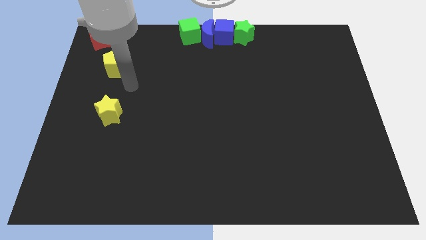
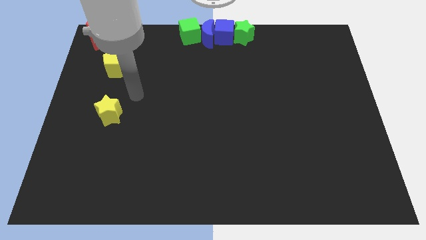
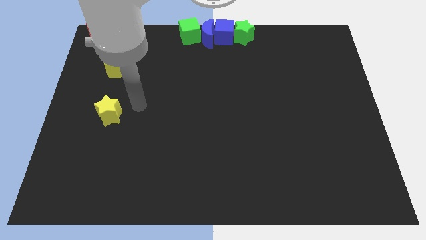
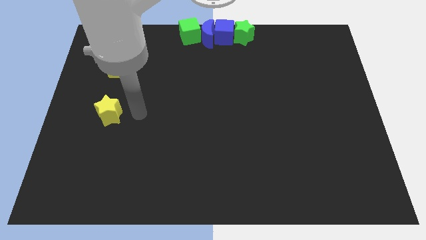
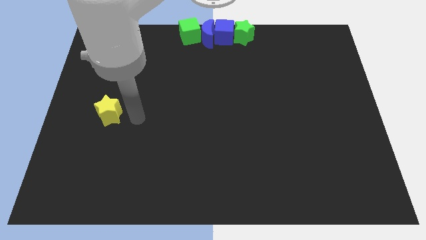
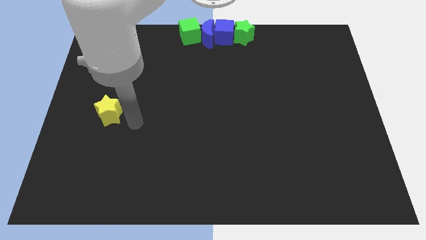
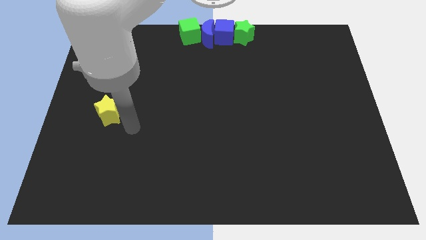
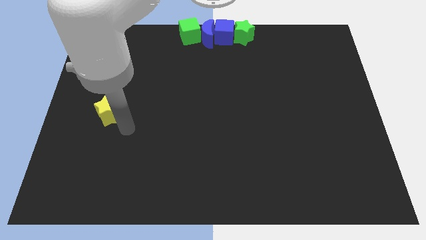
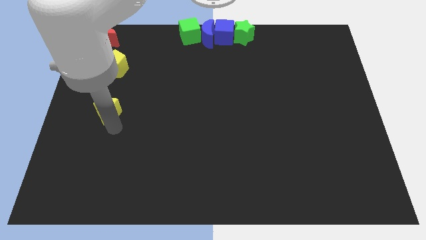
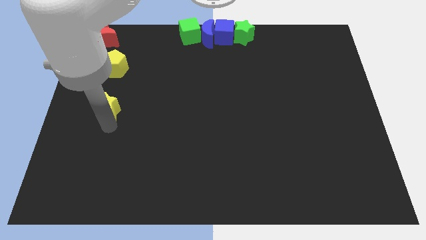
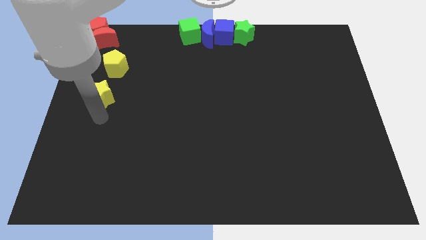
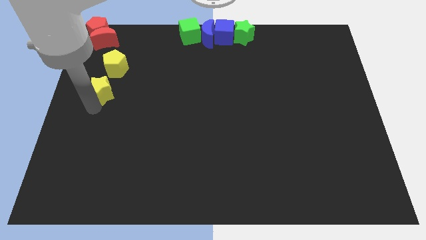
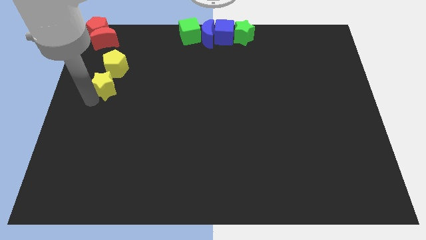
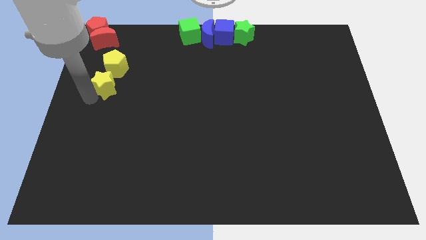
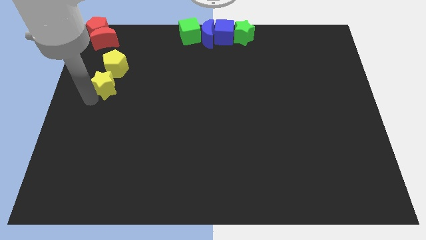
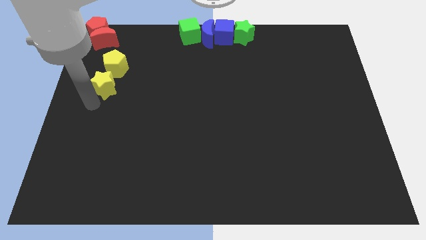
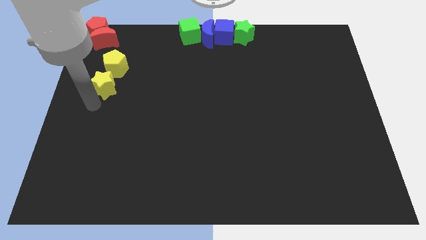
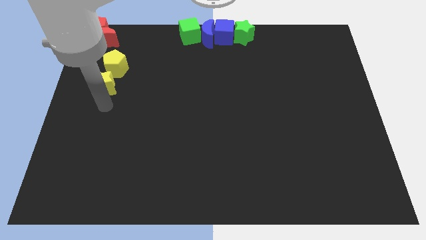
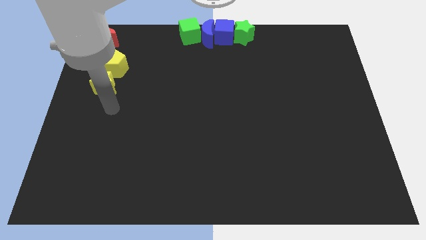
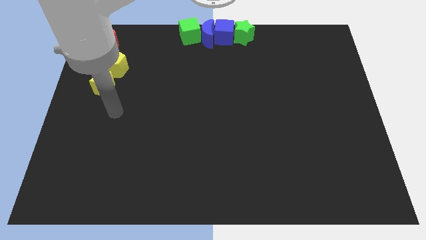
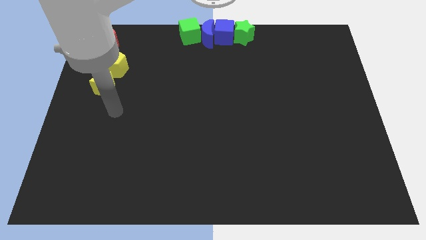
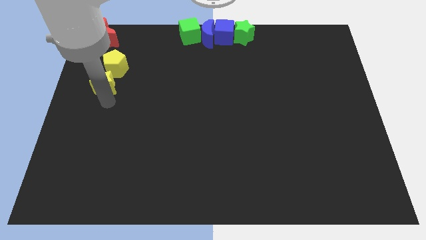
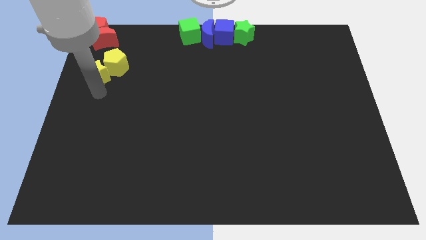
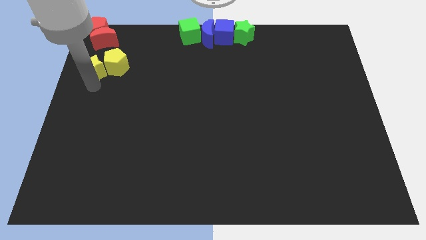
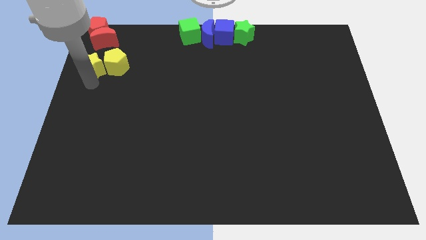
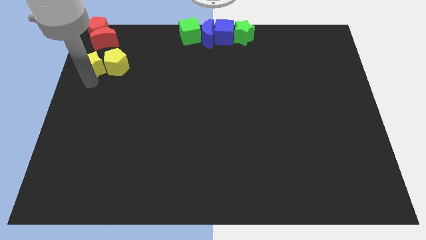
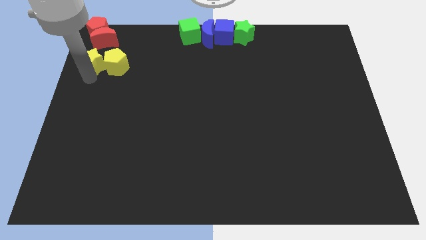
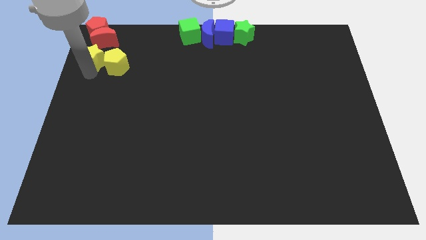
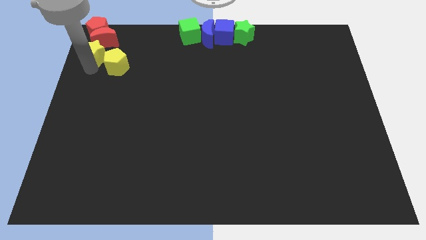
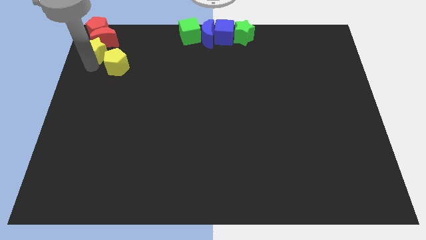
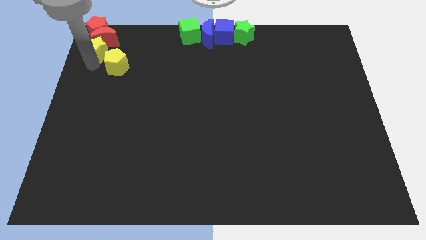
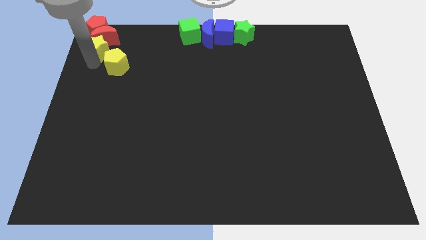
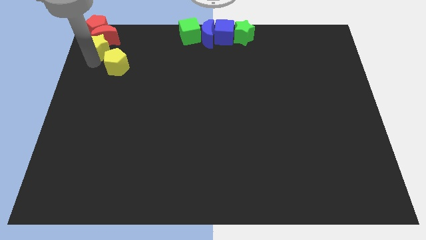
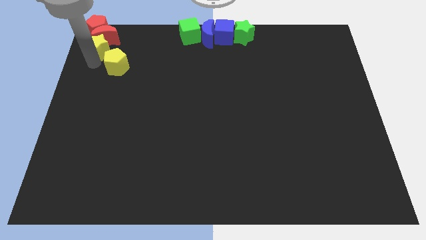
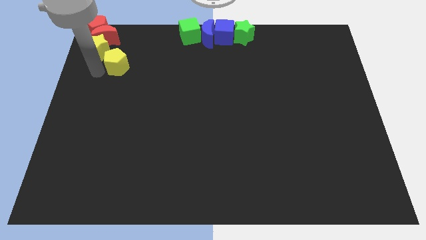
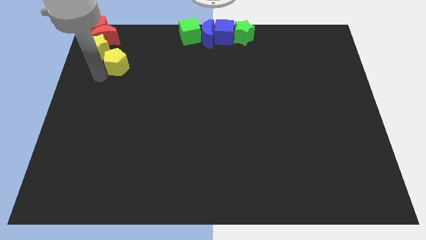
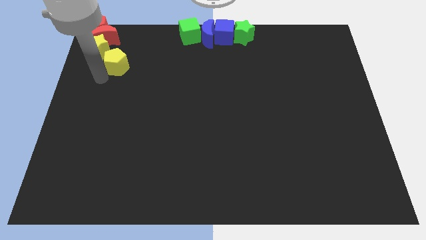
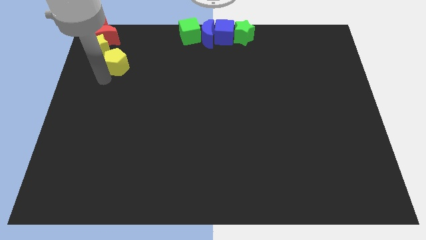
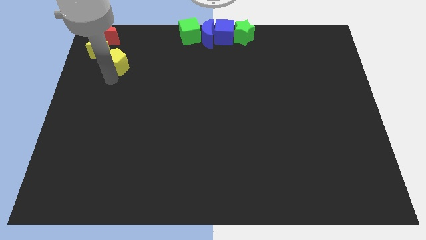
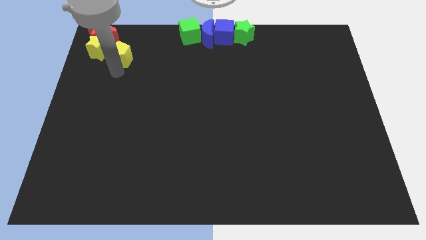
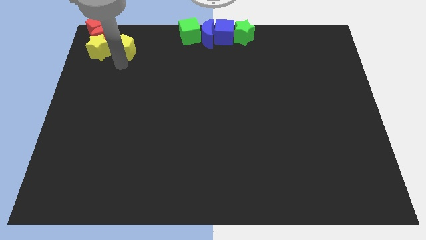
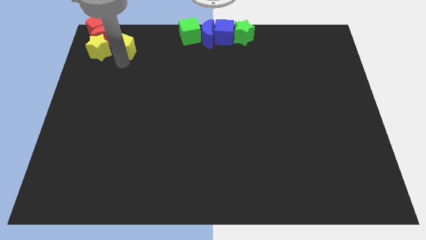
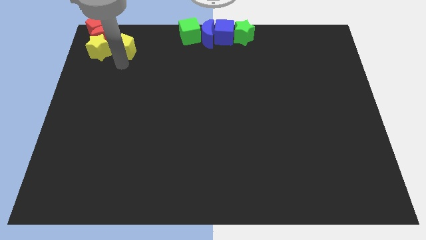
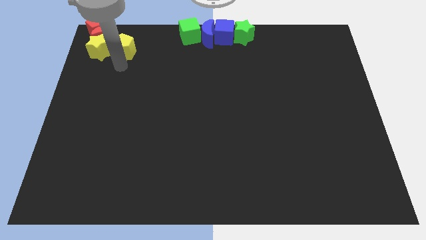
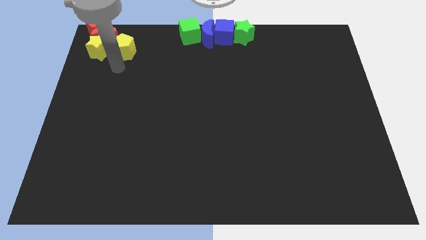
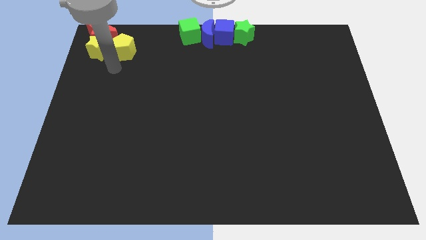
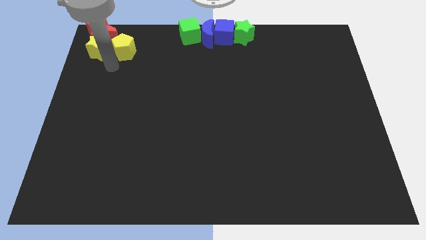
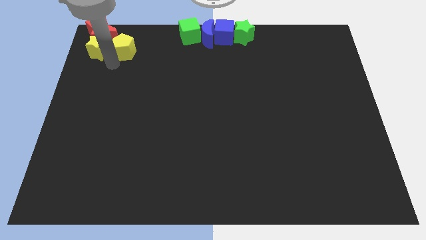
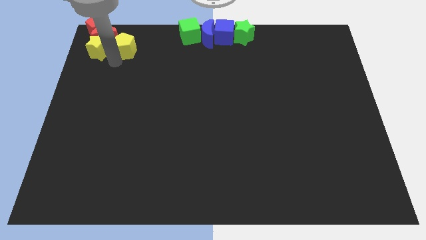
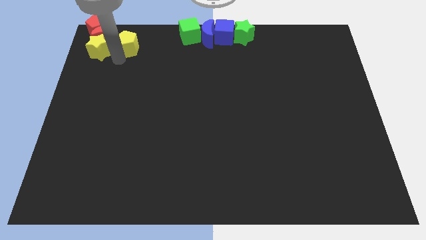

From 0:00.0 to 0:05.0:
move the yellow blocks towards the red blocks

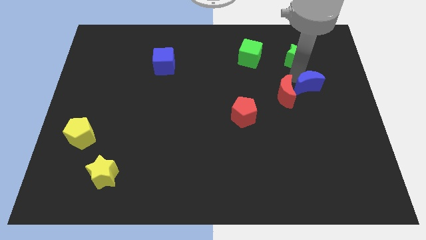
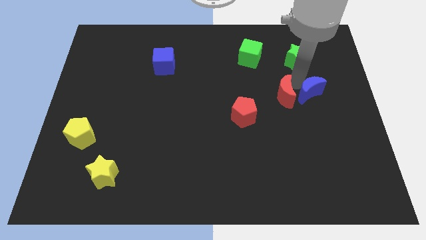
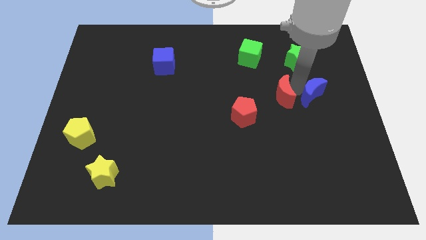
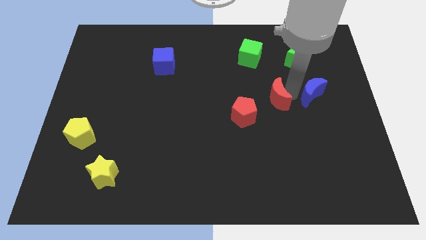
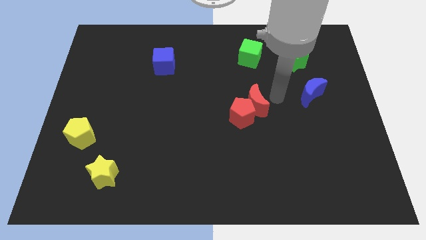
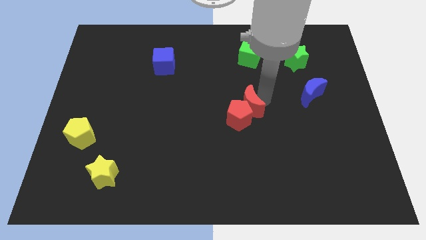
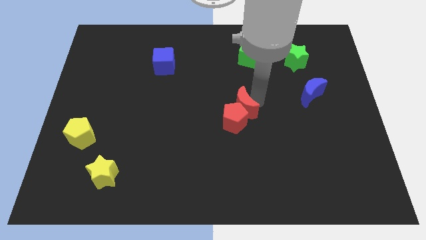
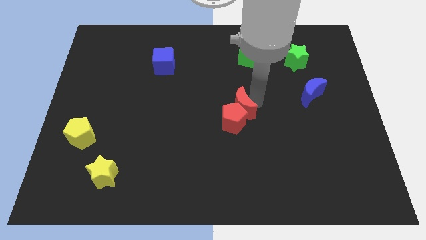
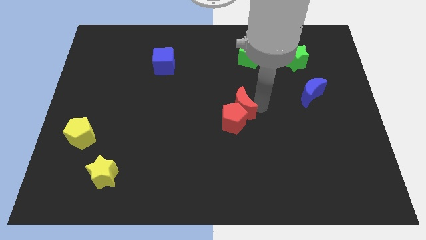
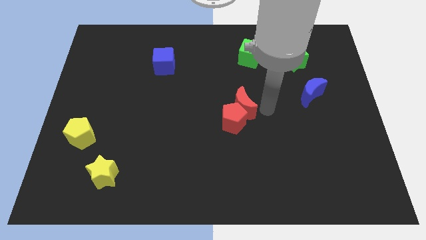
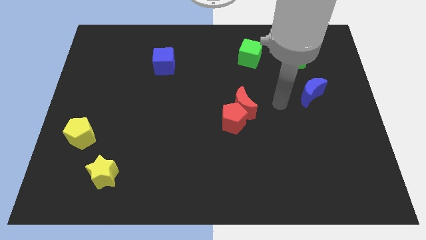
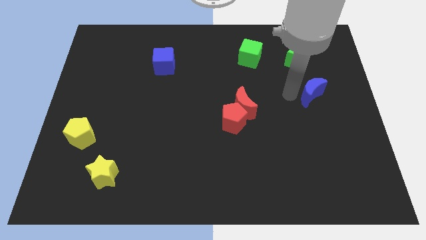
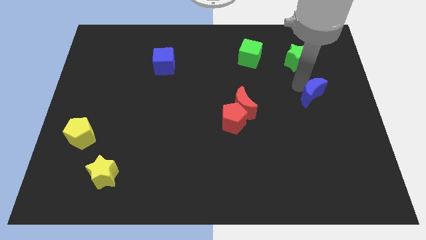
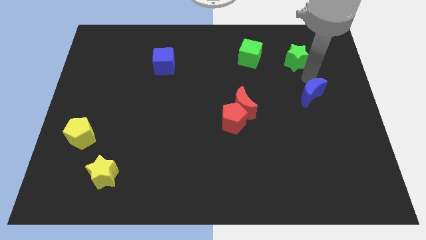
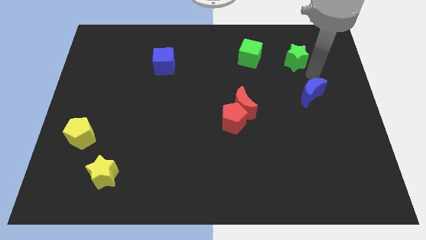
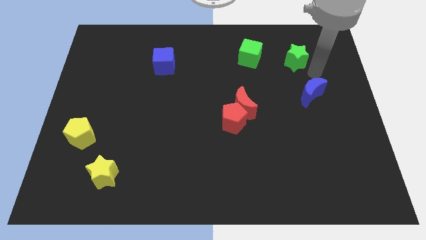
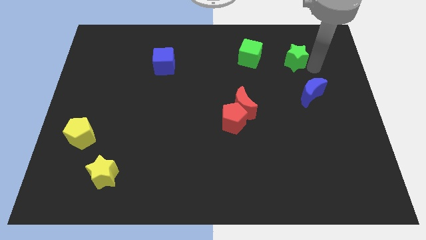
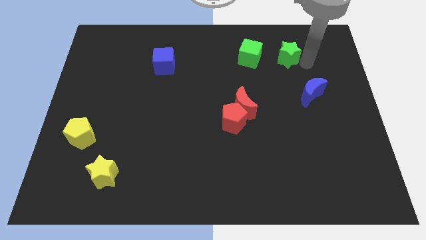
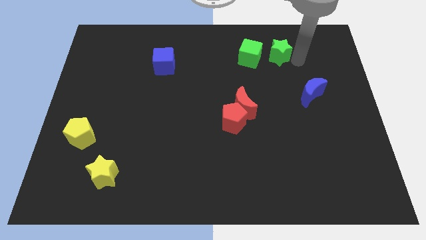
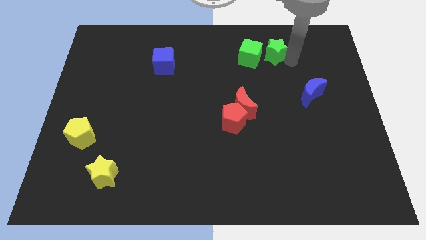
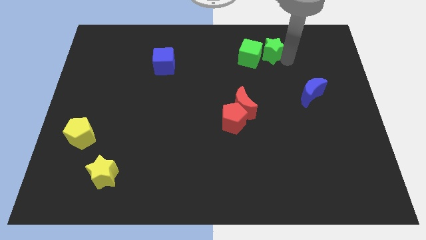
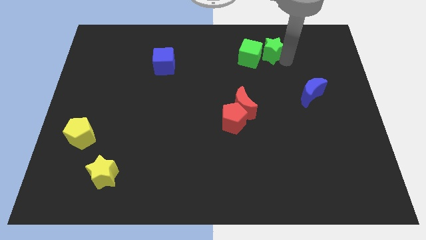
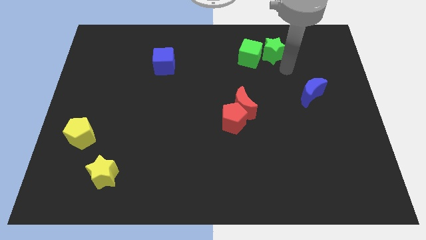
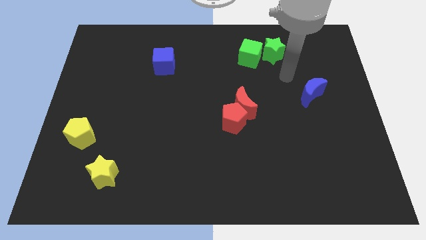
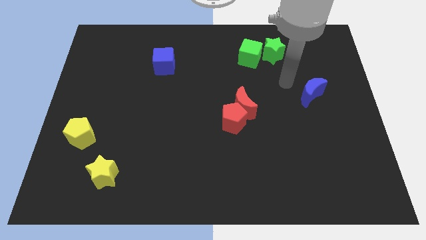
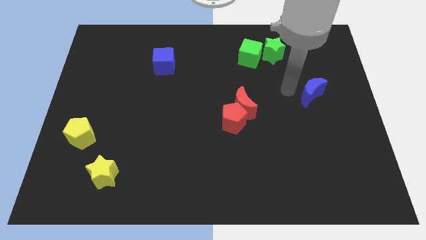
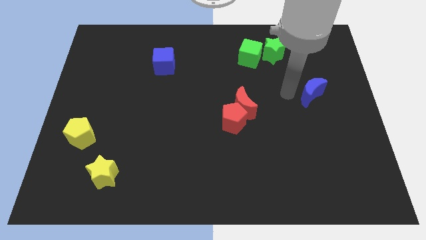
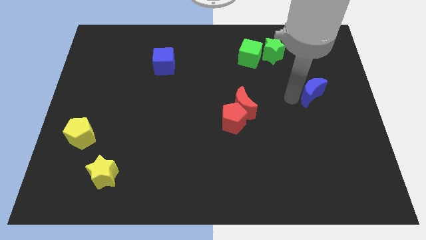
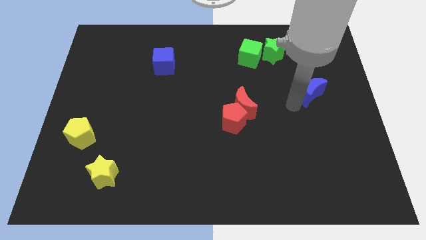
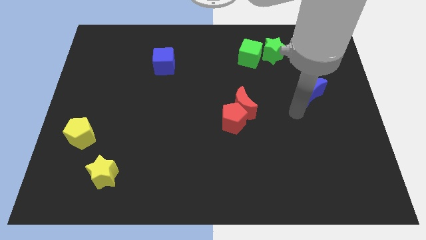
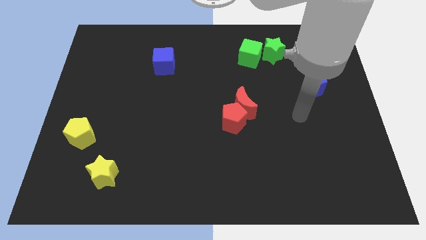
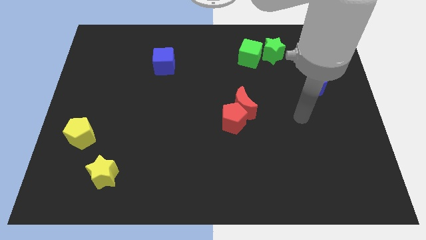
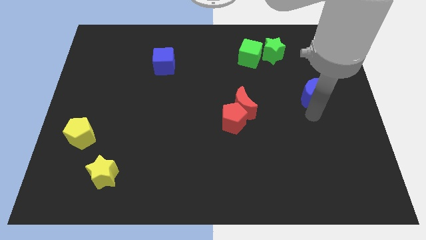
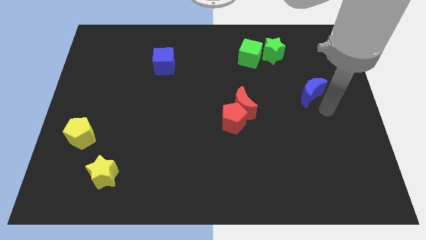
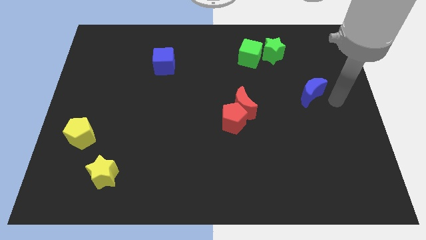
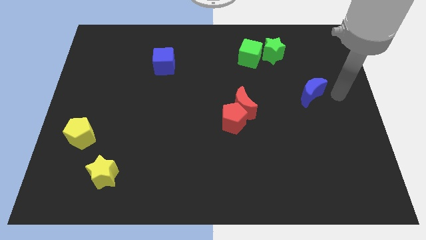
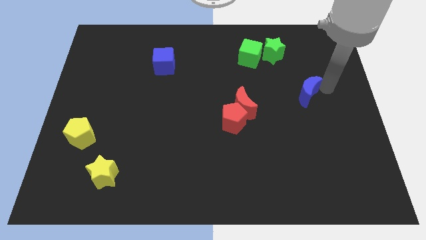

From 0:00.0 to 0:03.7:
push the red moon into the red pentagon

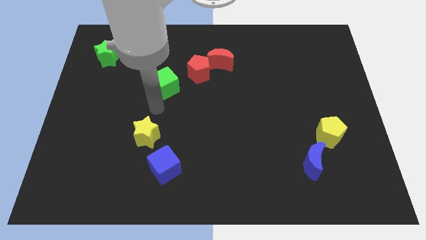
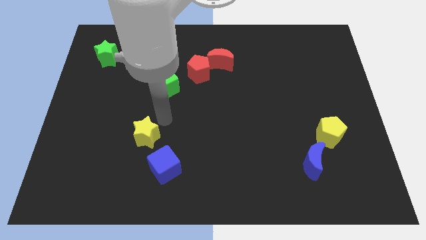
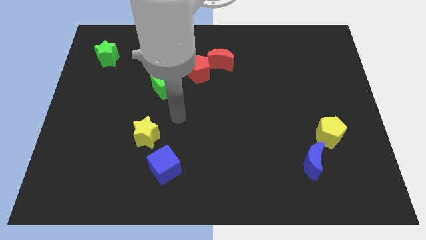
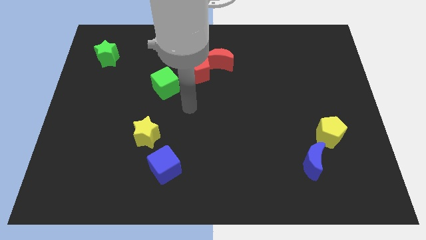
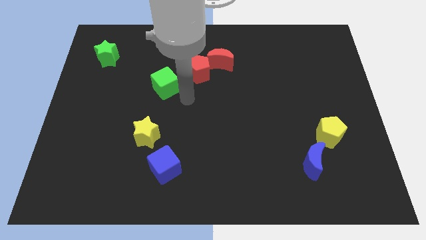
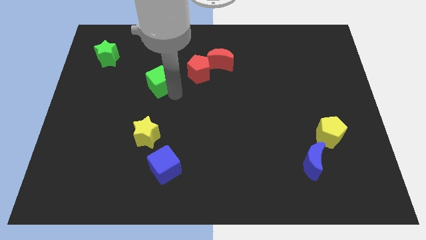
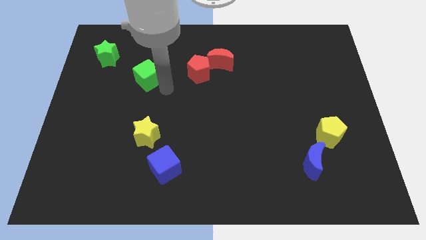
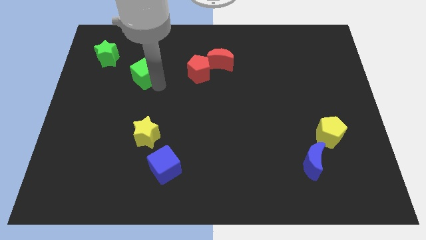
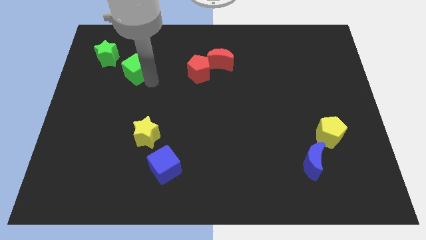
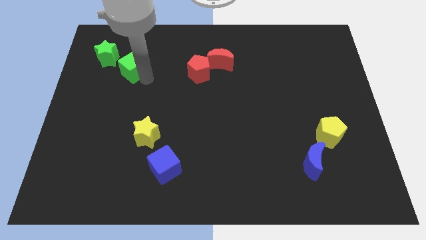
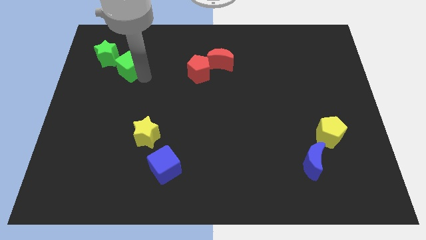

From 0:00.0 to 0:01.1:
push green cube near green star
